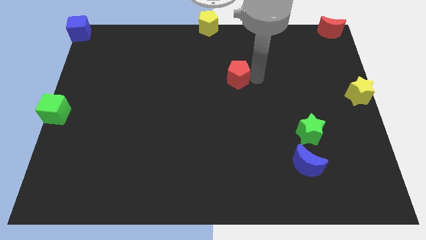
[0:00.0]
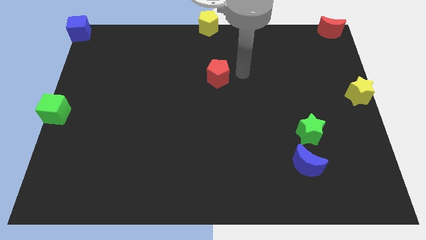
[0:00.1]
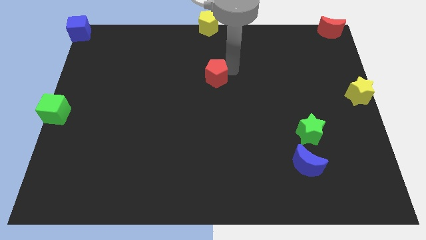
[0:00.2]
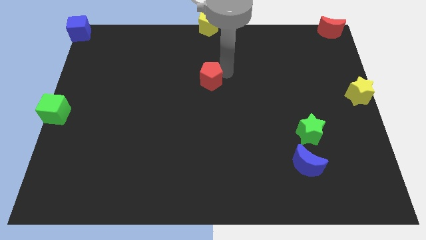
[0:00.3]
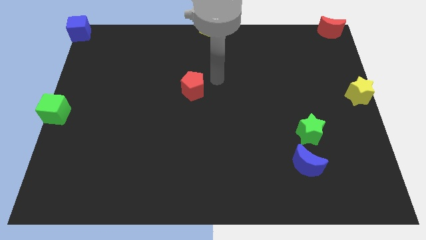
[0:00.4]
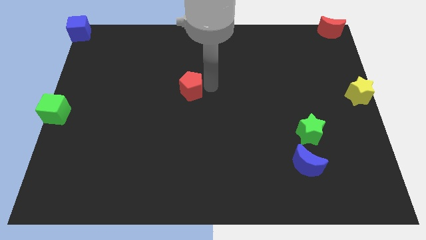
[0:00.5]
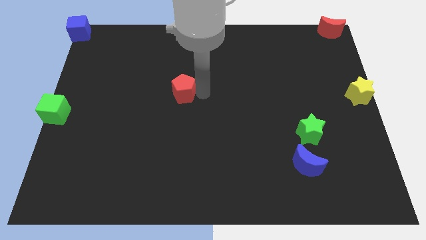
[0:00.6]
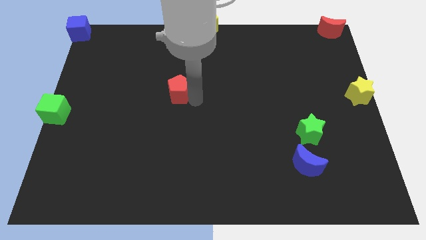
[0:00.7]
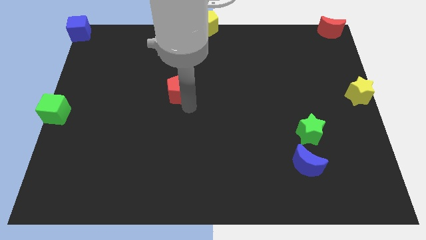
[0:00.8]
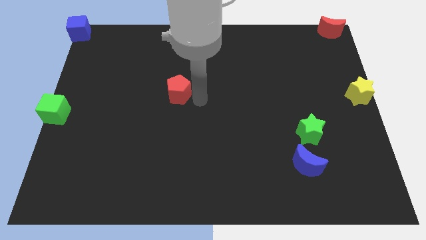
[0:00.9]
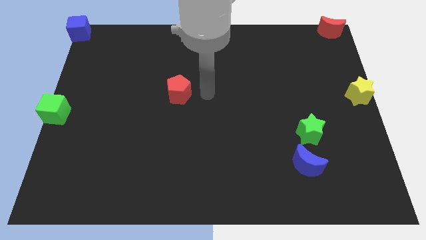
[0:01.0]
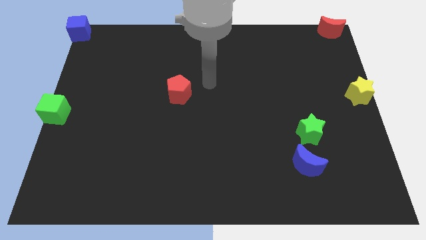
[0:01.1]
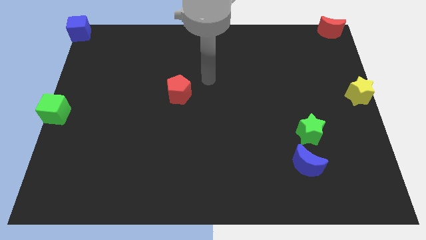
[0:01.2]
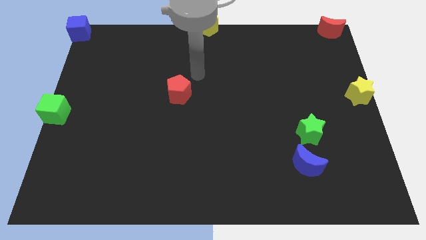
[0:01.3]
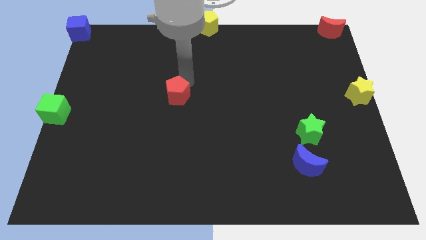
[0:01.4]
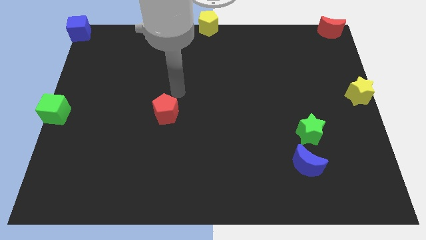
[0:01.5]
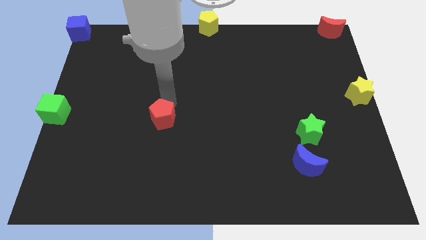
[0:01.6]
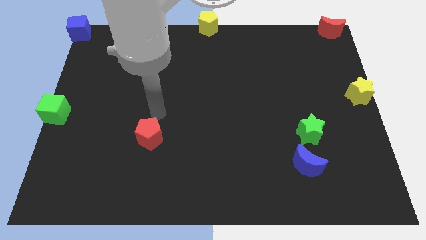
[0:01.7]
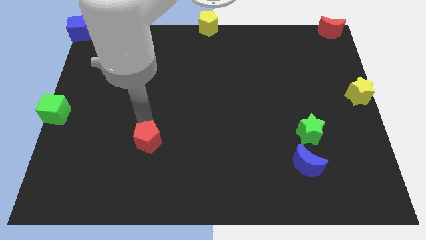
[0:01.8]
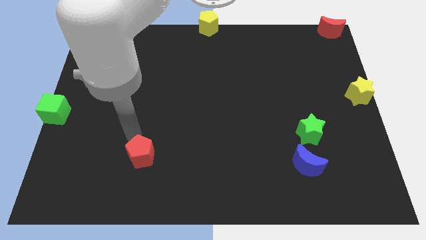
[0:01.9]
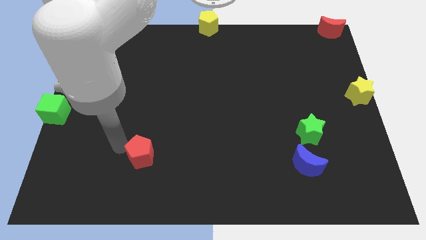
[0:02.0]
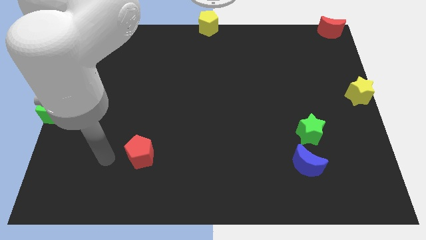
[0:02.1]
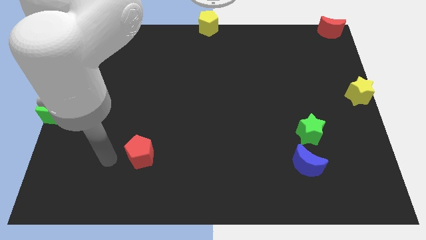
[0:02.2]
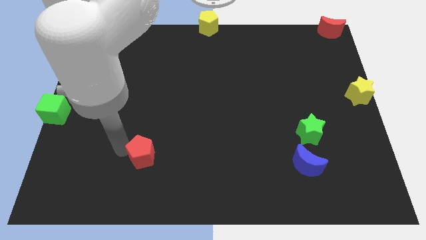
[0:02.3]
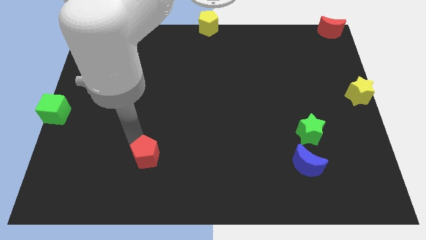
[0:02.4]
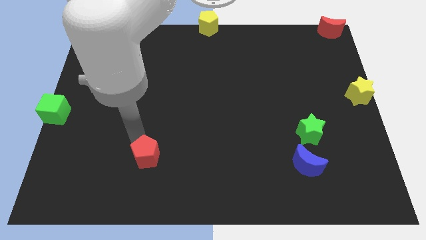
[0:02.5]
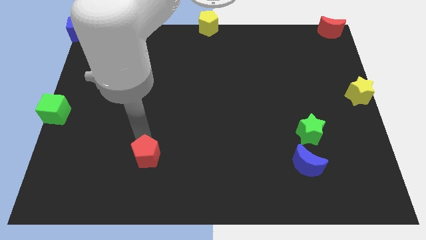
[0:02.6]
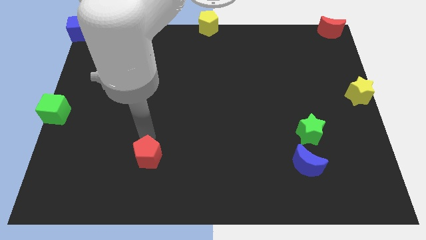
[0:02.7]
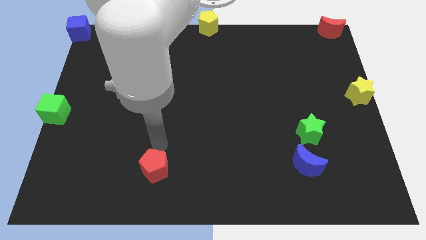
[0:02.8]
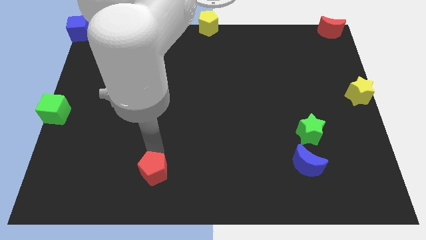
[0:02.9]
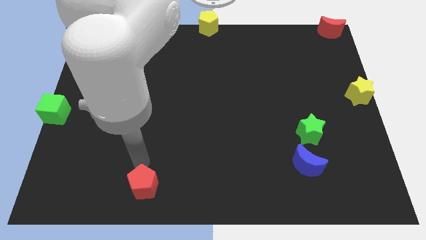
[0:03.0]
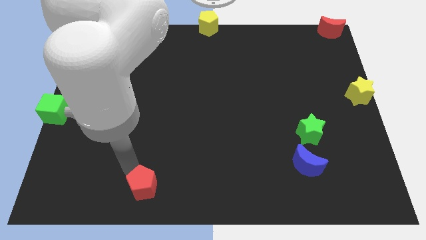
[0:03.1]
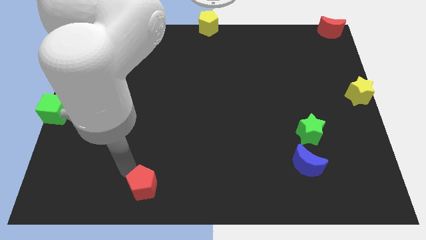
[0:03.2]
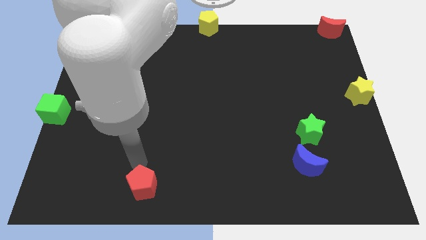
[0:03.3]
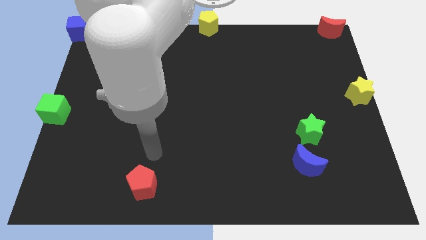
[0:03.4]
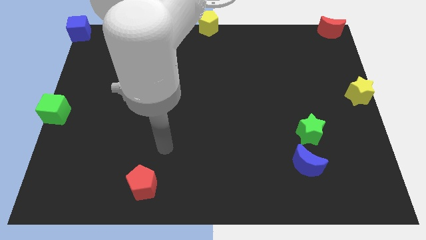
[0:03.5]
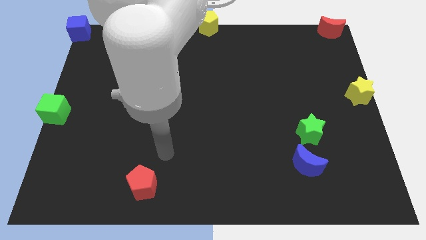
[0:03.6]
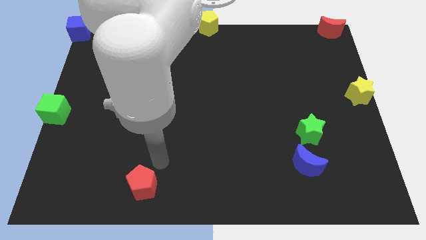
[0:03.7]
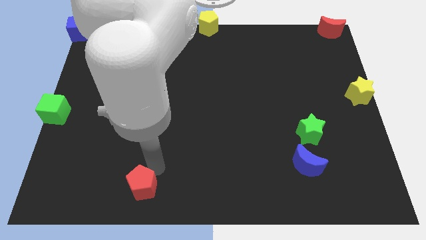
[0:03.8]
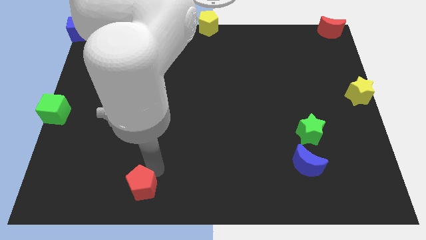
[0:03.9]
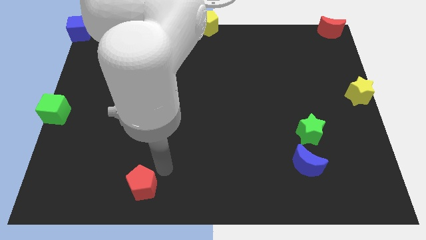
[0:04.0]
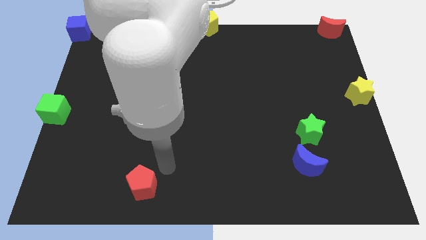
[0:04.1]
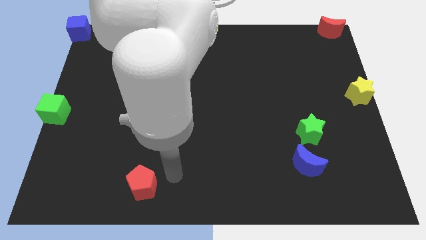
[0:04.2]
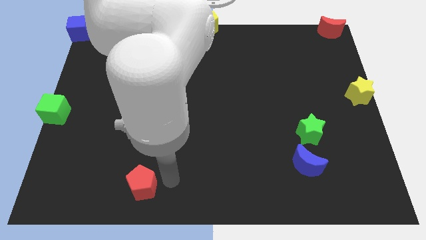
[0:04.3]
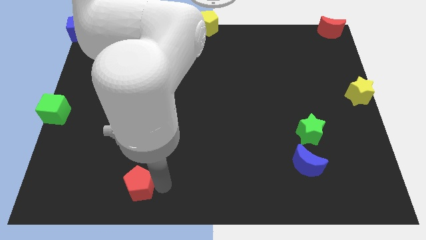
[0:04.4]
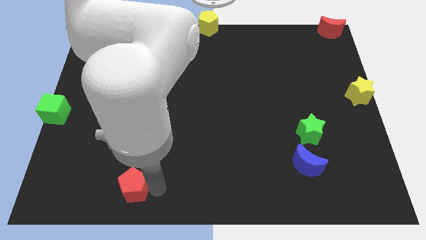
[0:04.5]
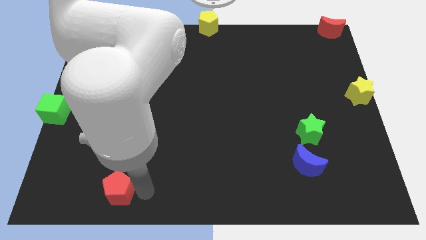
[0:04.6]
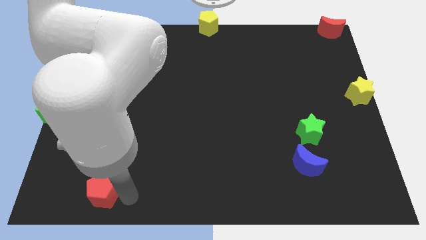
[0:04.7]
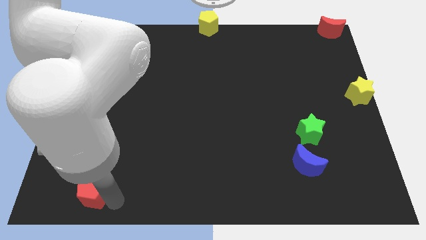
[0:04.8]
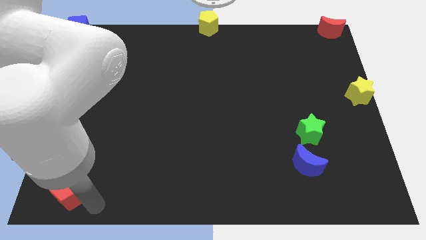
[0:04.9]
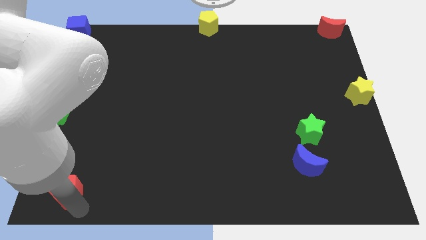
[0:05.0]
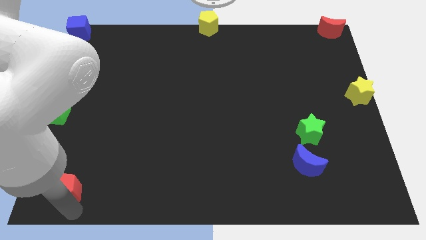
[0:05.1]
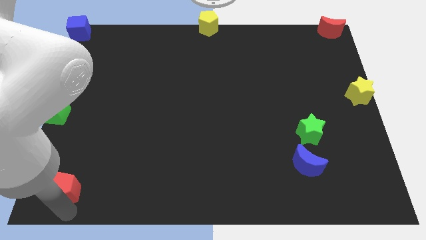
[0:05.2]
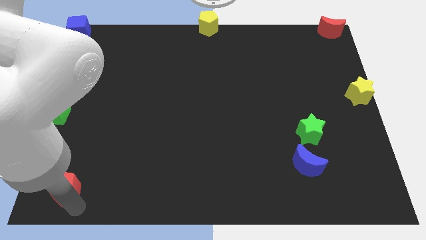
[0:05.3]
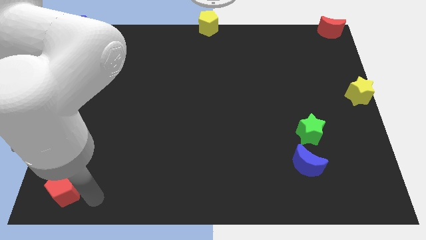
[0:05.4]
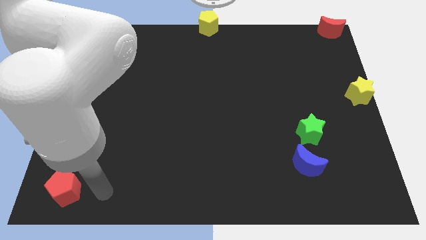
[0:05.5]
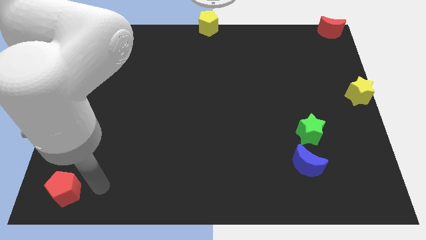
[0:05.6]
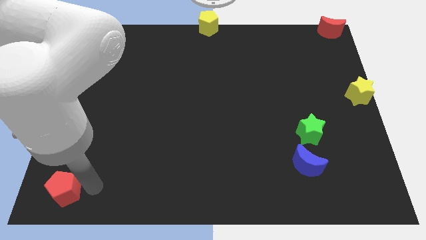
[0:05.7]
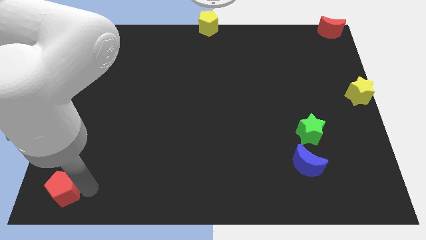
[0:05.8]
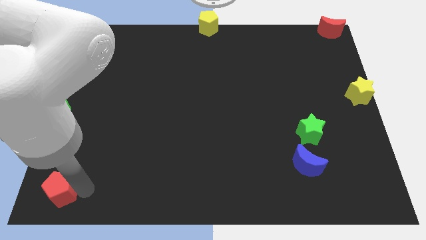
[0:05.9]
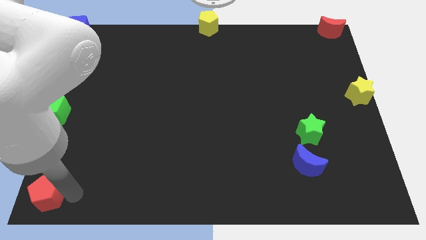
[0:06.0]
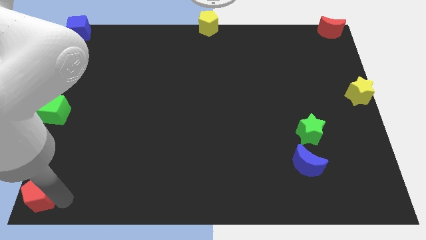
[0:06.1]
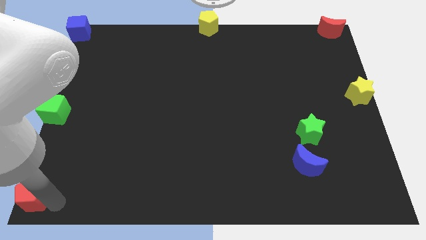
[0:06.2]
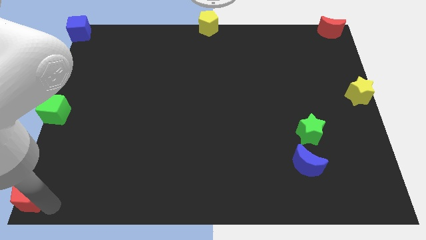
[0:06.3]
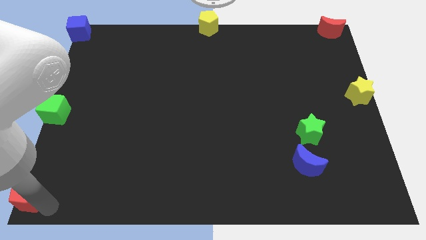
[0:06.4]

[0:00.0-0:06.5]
move the red pentagon to the bottom left corner

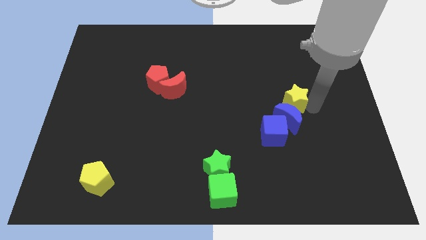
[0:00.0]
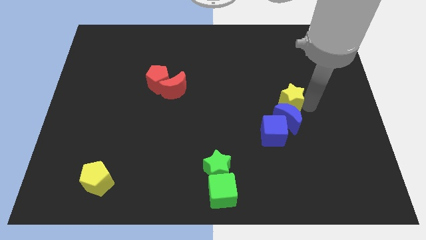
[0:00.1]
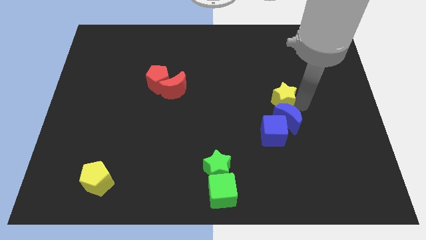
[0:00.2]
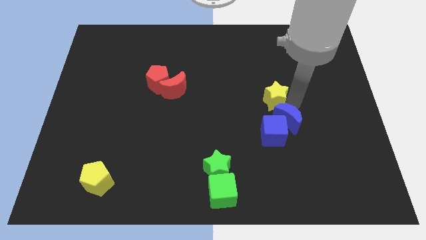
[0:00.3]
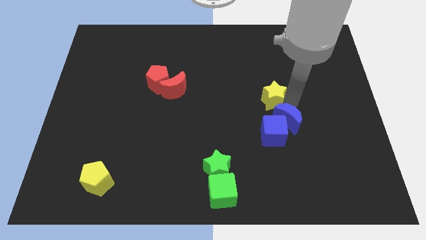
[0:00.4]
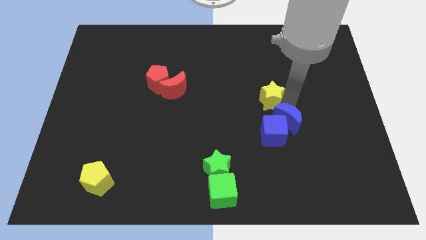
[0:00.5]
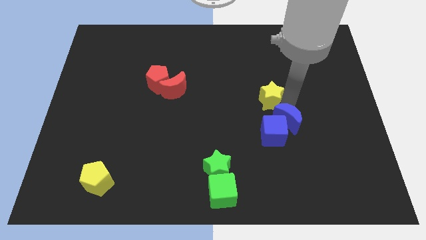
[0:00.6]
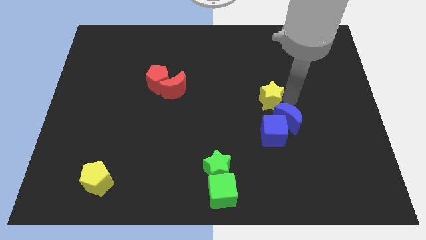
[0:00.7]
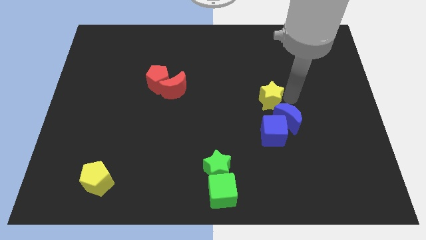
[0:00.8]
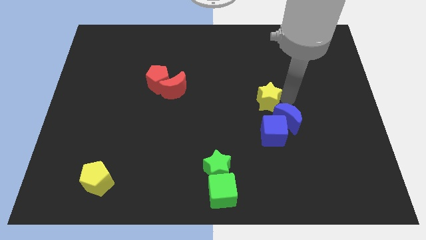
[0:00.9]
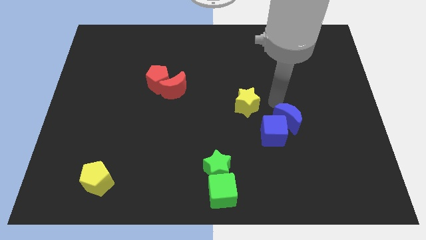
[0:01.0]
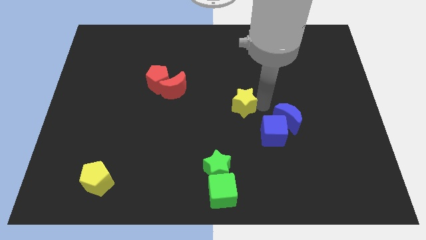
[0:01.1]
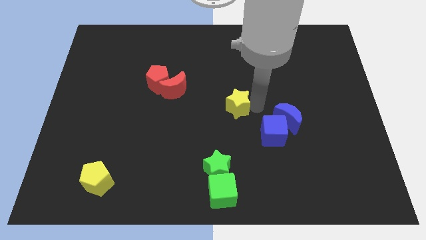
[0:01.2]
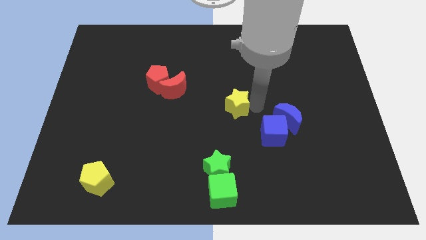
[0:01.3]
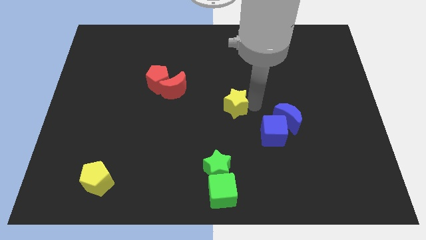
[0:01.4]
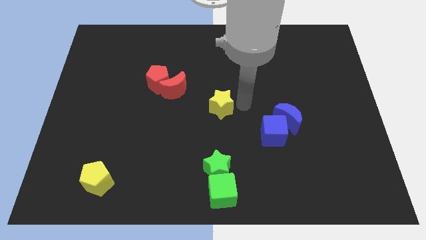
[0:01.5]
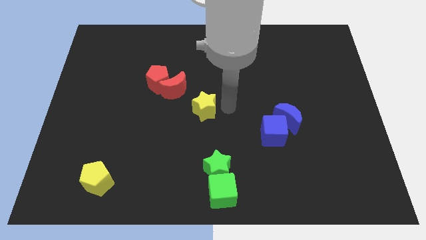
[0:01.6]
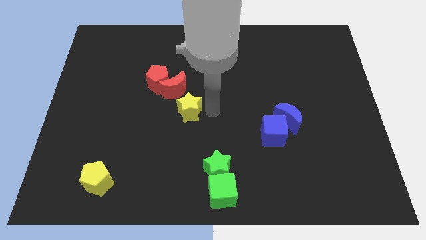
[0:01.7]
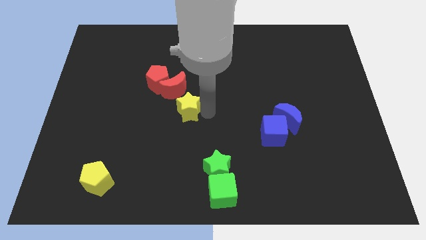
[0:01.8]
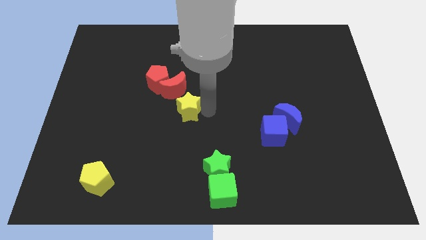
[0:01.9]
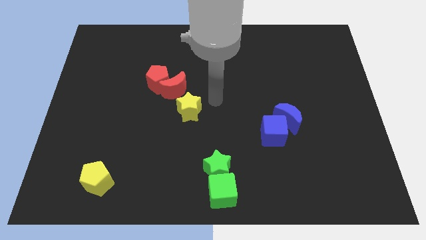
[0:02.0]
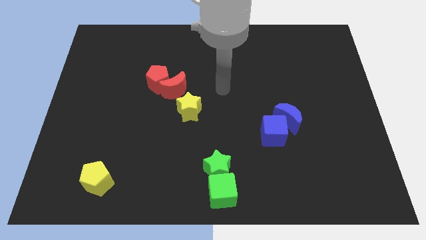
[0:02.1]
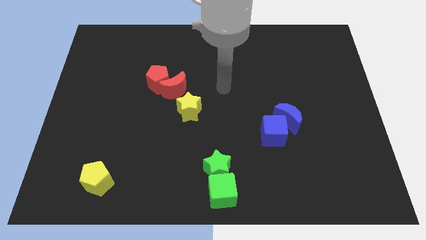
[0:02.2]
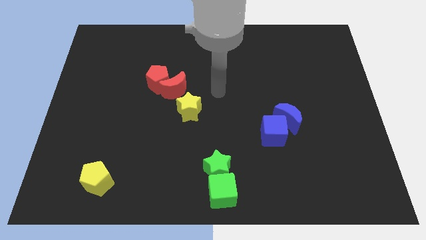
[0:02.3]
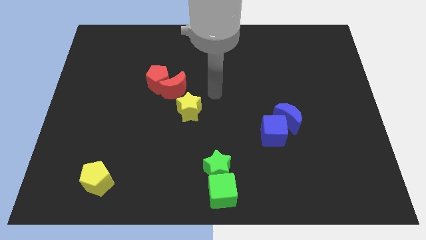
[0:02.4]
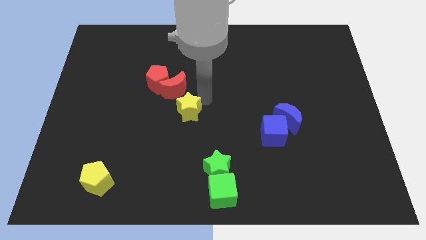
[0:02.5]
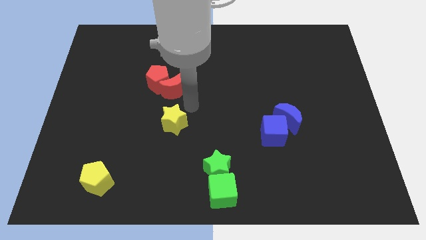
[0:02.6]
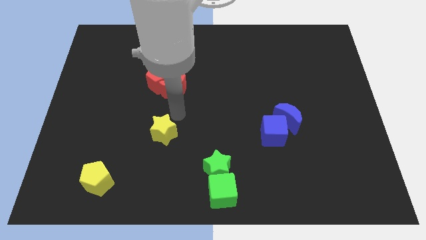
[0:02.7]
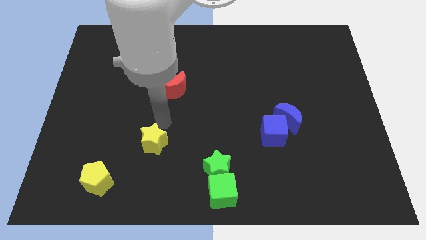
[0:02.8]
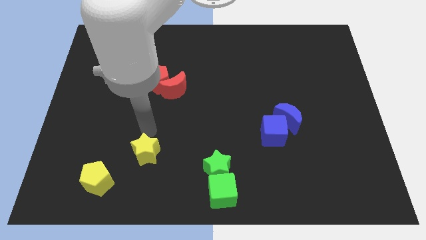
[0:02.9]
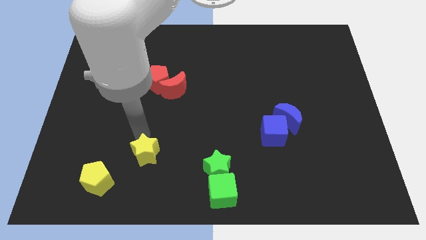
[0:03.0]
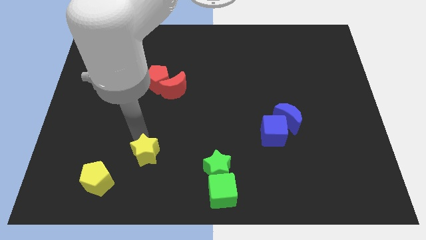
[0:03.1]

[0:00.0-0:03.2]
separate the yellow star from the blue crescent
